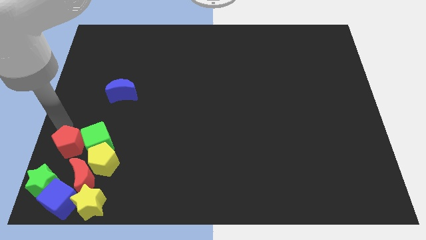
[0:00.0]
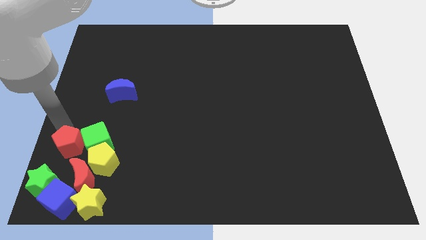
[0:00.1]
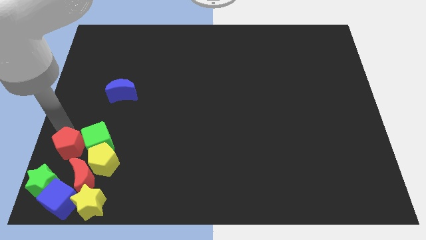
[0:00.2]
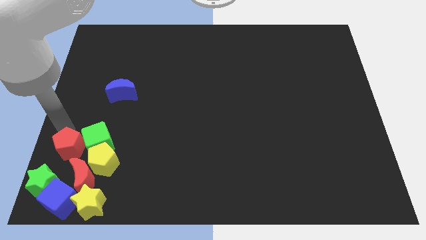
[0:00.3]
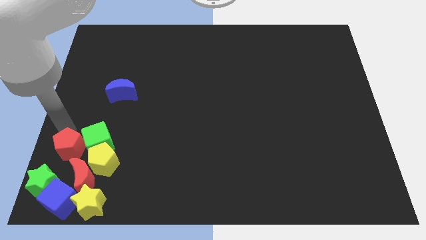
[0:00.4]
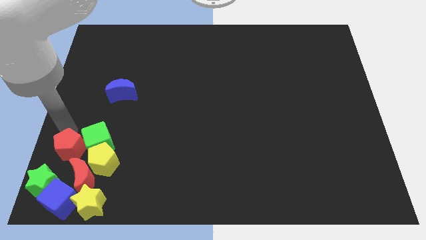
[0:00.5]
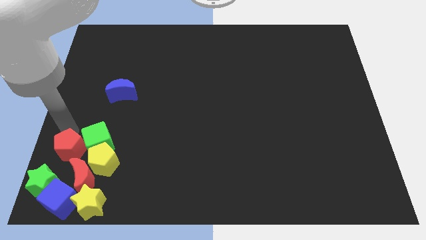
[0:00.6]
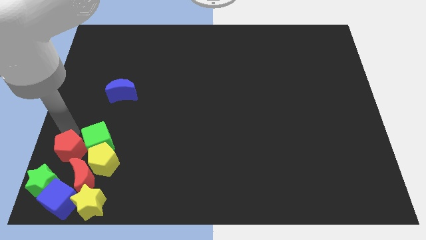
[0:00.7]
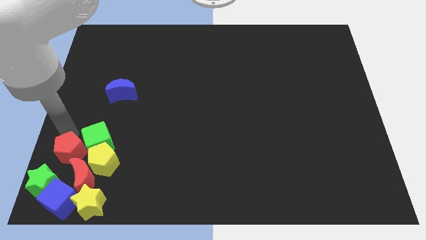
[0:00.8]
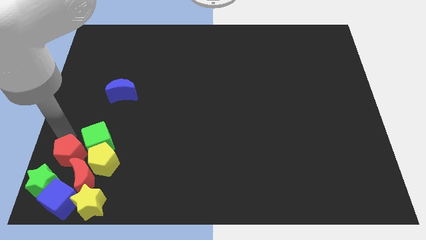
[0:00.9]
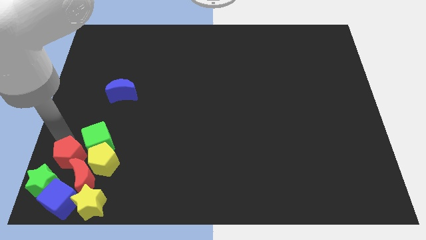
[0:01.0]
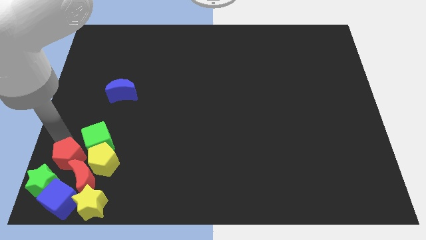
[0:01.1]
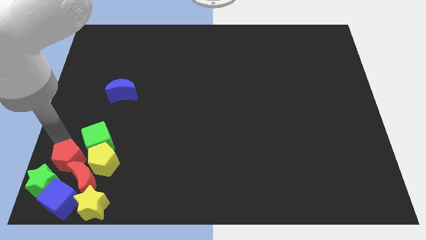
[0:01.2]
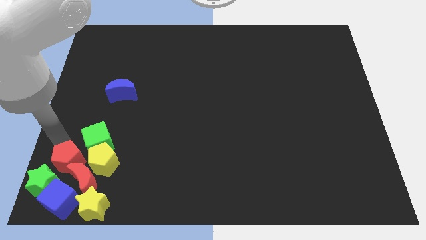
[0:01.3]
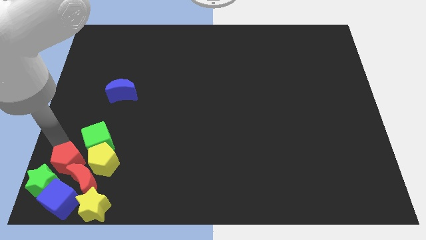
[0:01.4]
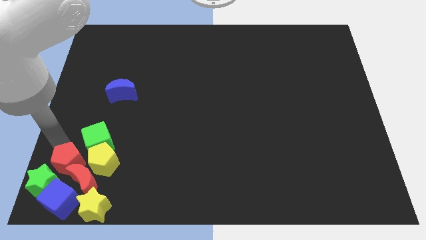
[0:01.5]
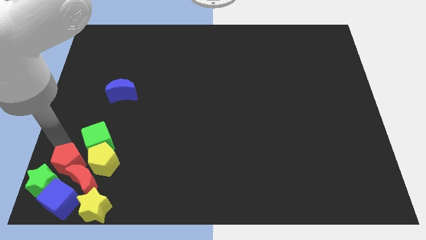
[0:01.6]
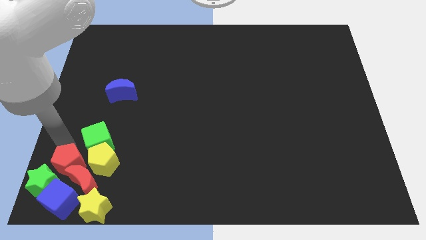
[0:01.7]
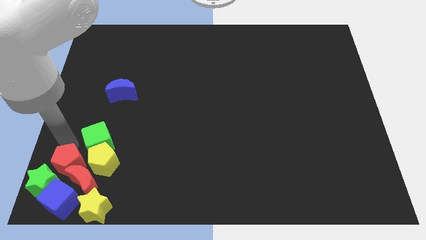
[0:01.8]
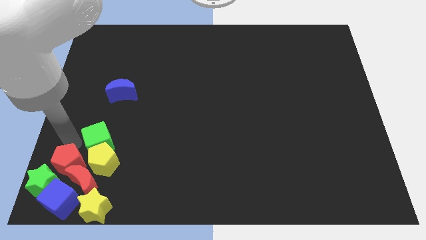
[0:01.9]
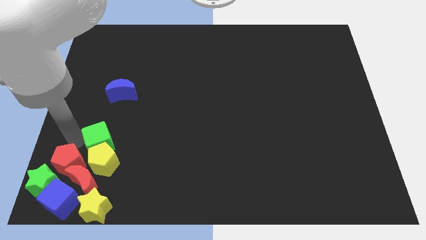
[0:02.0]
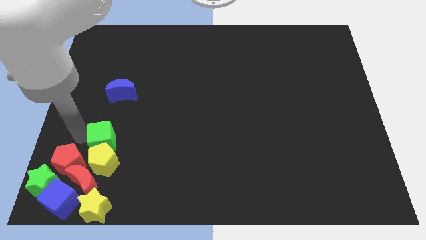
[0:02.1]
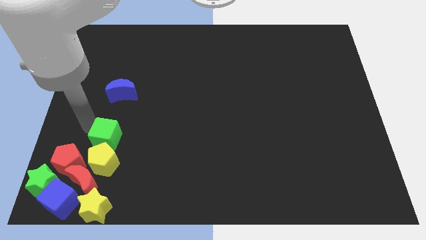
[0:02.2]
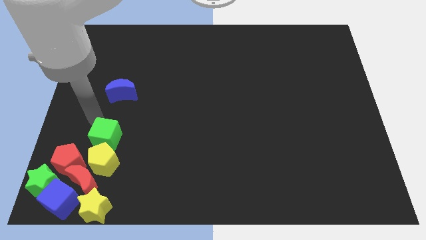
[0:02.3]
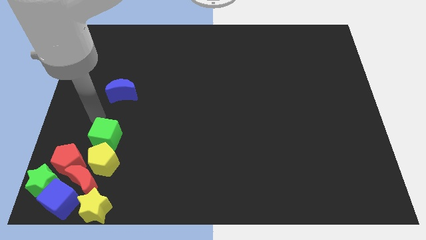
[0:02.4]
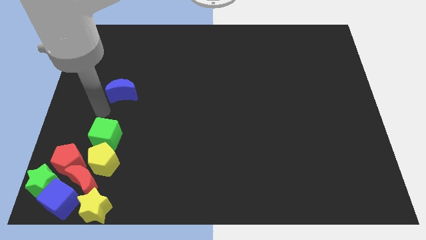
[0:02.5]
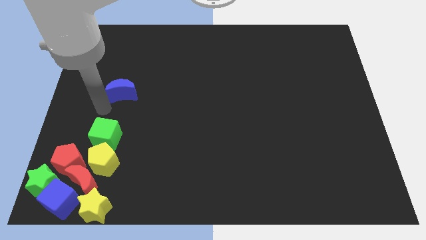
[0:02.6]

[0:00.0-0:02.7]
slightly touch the green cube

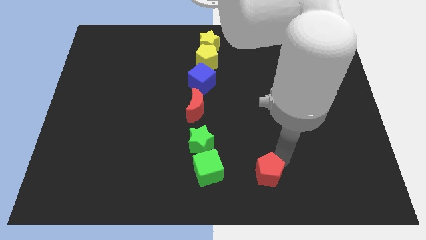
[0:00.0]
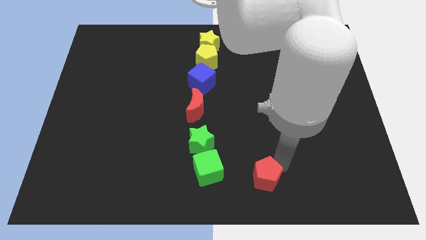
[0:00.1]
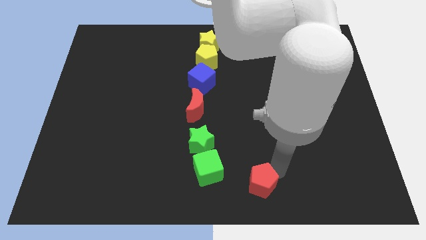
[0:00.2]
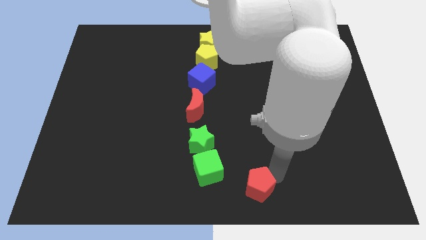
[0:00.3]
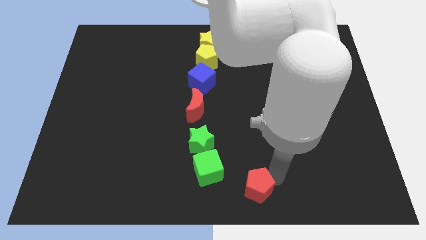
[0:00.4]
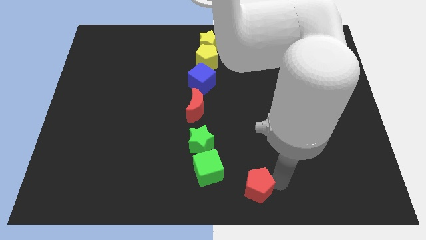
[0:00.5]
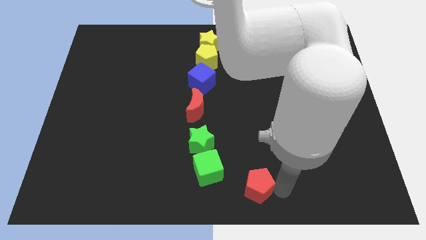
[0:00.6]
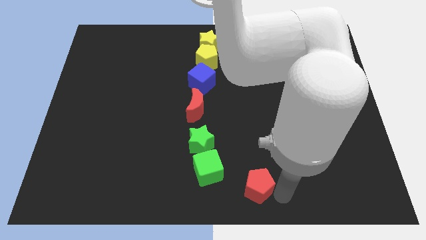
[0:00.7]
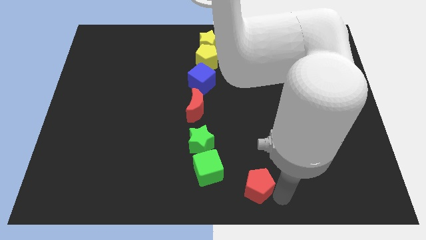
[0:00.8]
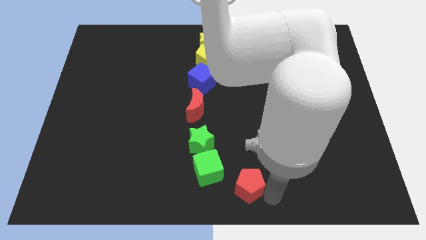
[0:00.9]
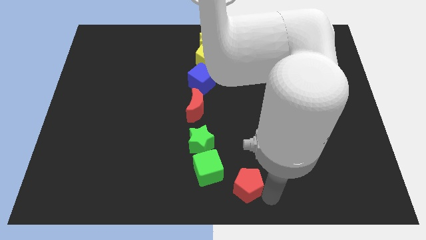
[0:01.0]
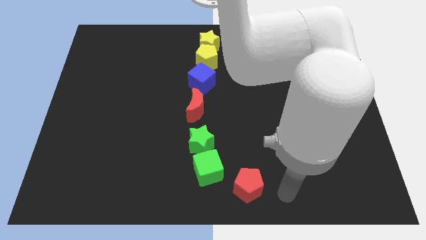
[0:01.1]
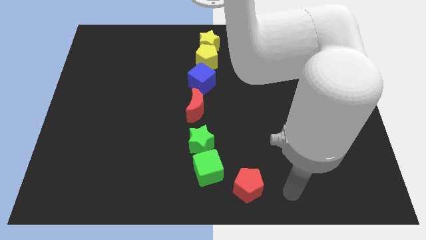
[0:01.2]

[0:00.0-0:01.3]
place the red pentagon at the bottom right side of the green cube

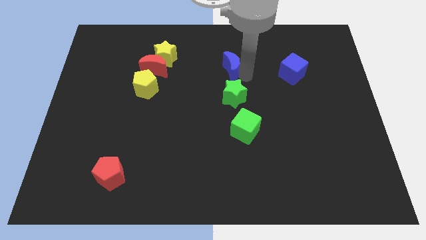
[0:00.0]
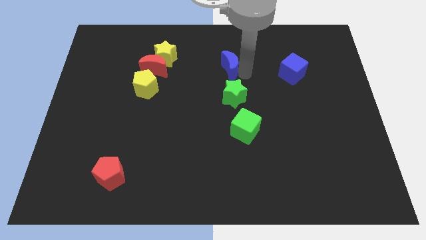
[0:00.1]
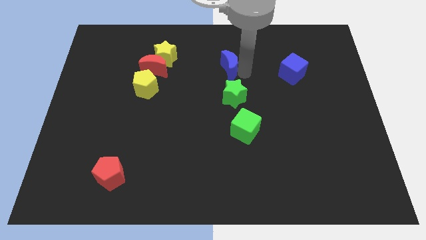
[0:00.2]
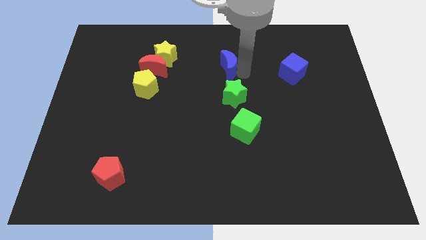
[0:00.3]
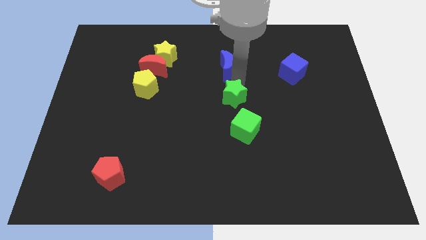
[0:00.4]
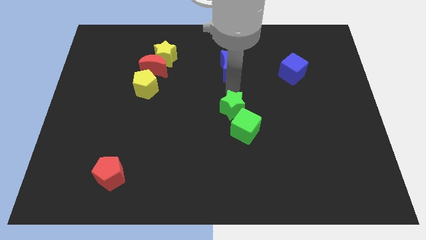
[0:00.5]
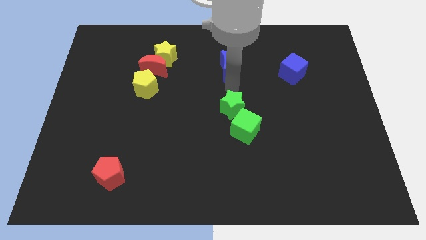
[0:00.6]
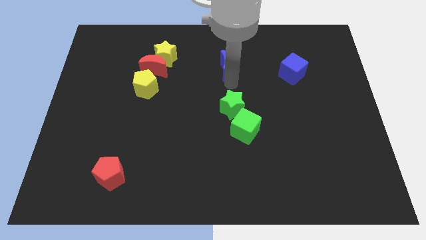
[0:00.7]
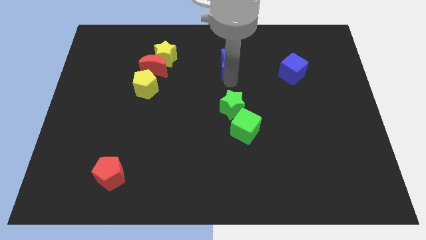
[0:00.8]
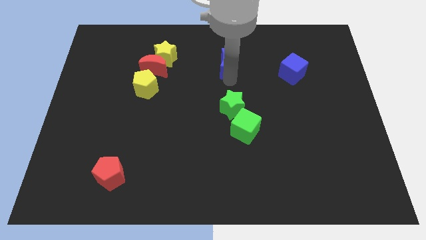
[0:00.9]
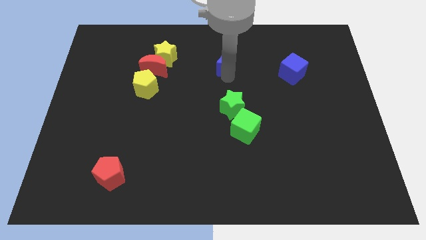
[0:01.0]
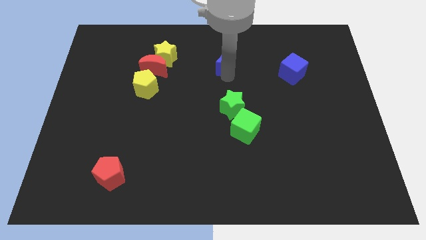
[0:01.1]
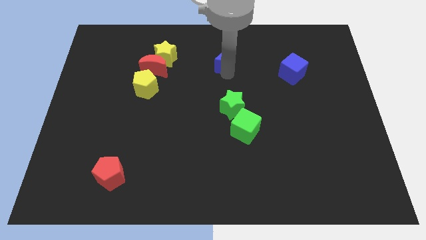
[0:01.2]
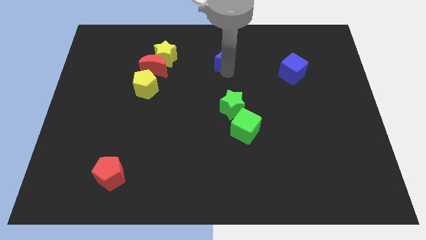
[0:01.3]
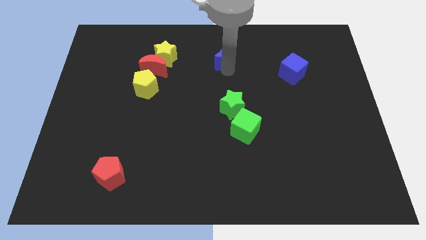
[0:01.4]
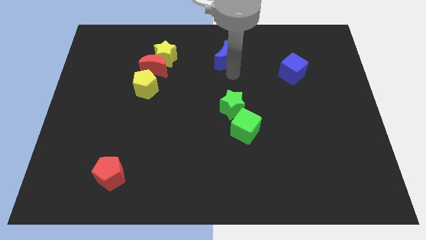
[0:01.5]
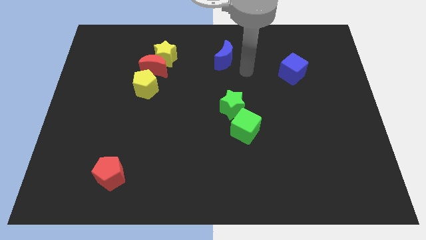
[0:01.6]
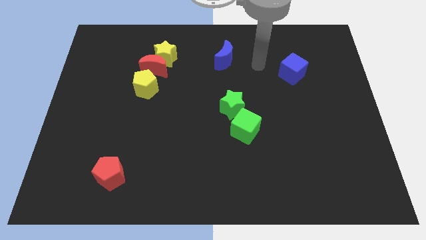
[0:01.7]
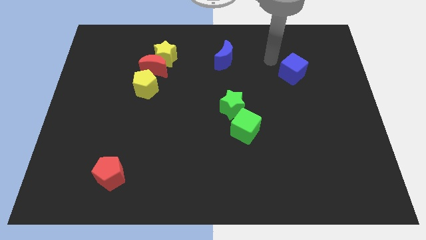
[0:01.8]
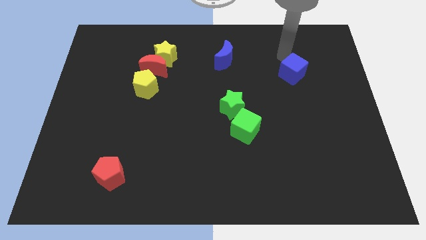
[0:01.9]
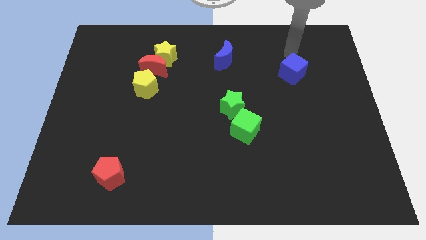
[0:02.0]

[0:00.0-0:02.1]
slide the blue crescent towards the top center of the board

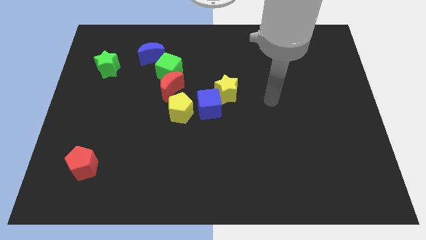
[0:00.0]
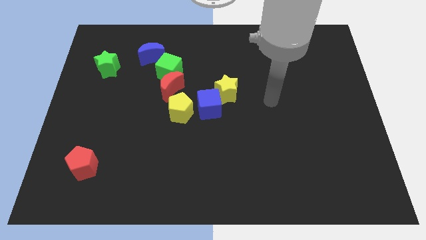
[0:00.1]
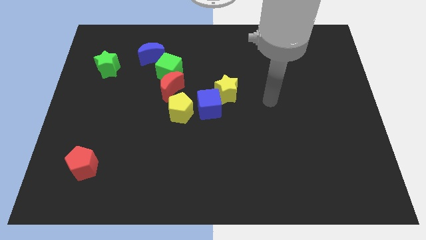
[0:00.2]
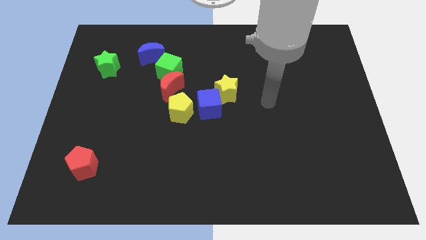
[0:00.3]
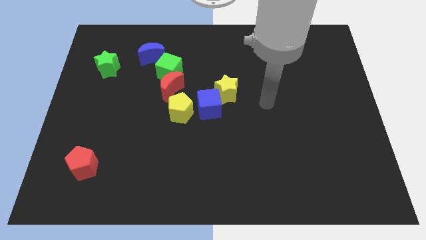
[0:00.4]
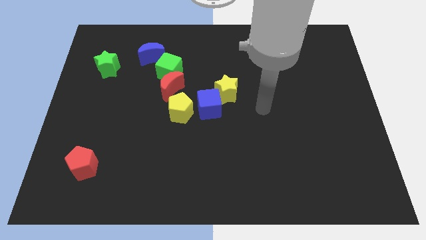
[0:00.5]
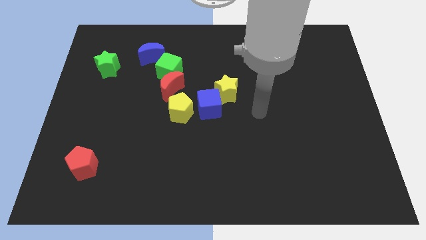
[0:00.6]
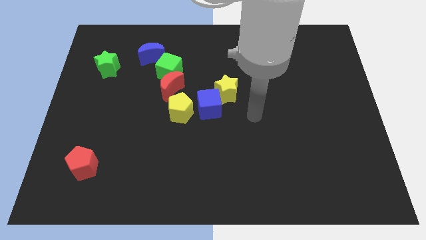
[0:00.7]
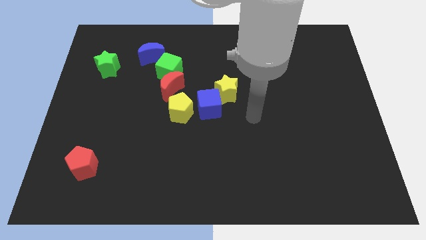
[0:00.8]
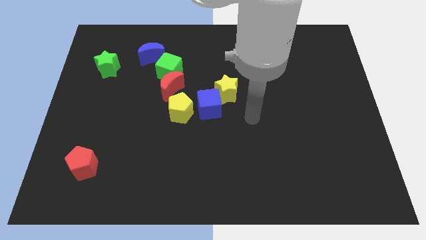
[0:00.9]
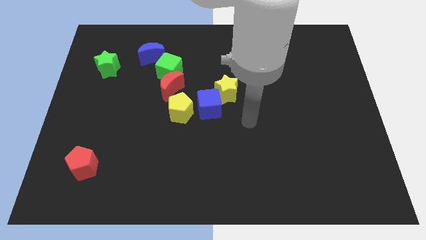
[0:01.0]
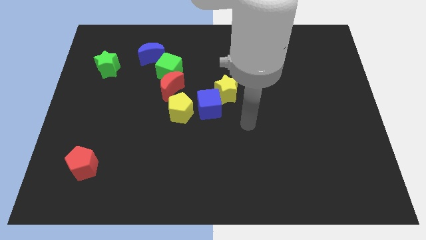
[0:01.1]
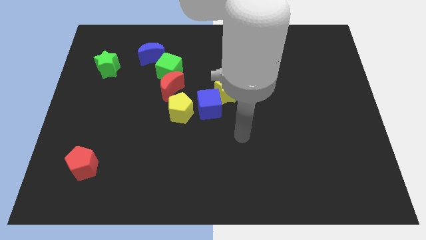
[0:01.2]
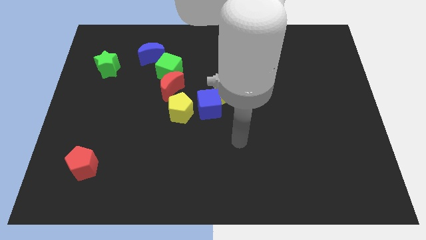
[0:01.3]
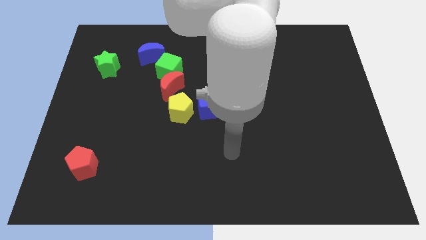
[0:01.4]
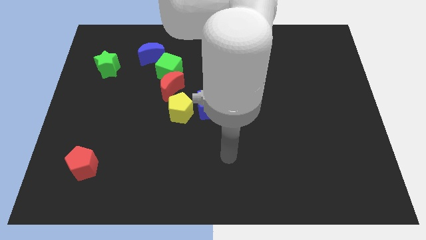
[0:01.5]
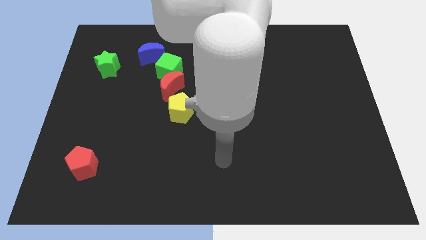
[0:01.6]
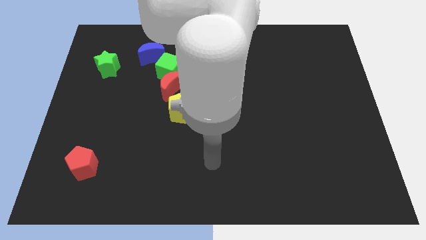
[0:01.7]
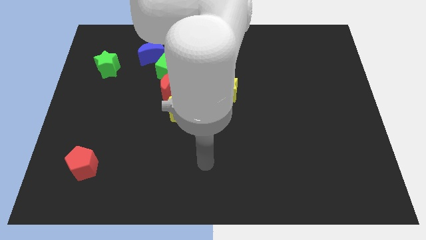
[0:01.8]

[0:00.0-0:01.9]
point the arm below the blue cube

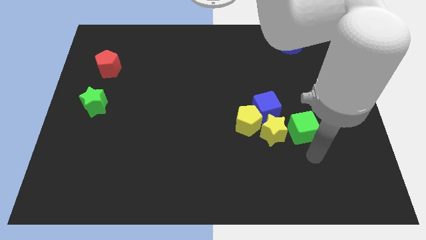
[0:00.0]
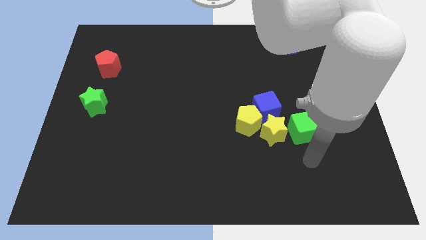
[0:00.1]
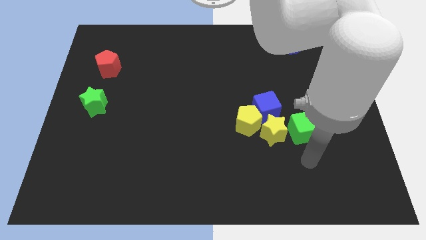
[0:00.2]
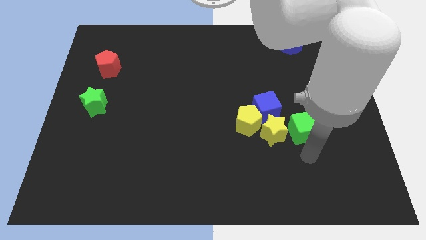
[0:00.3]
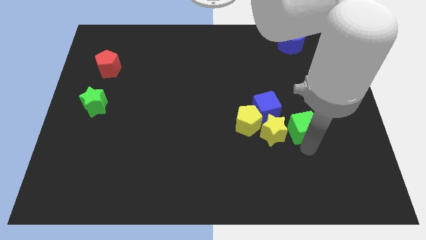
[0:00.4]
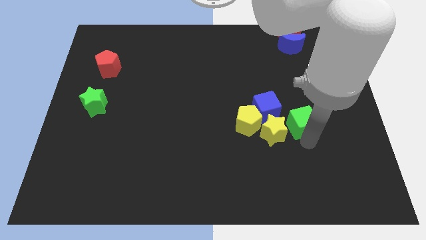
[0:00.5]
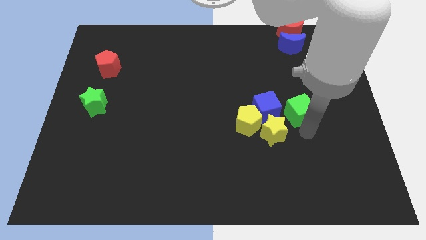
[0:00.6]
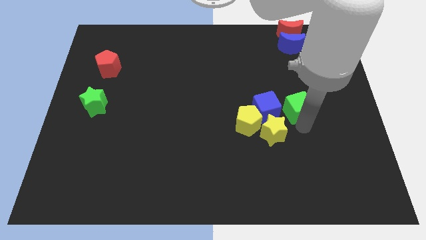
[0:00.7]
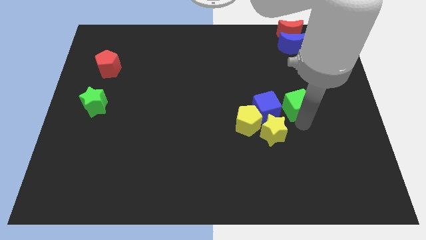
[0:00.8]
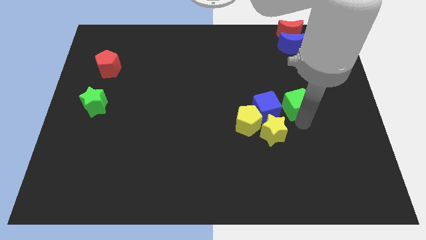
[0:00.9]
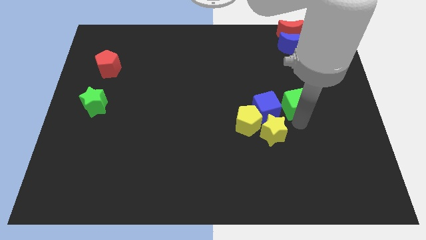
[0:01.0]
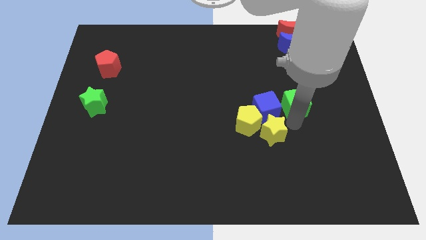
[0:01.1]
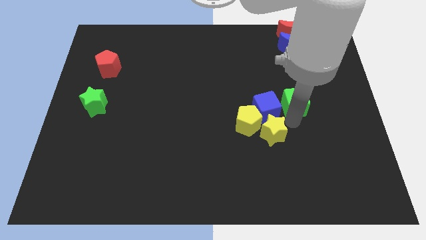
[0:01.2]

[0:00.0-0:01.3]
move the green cube towards the right side of the blue cube
